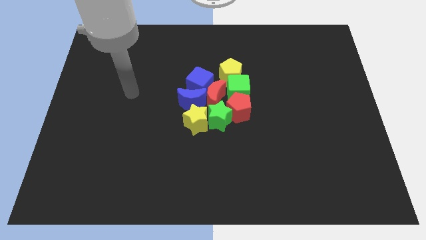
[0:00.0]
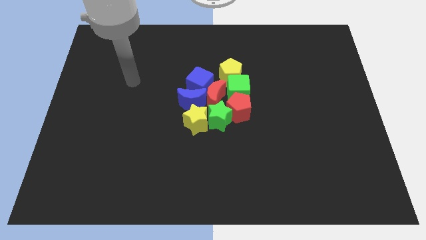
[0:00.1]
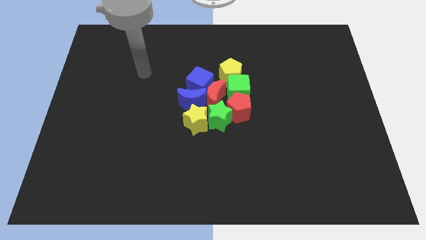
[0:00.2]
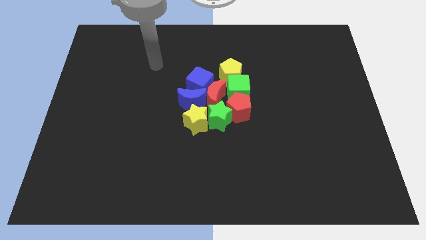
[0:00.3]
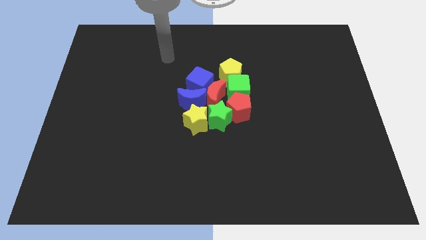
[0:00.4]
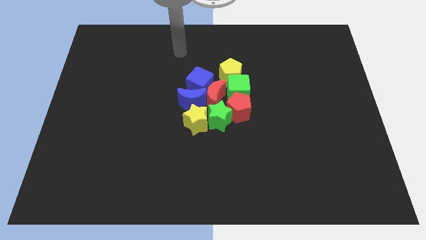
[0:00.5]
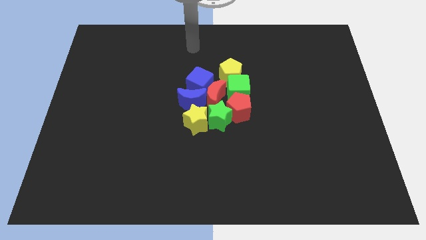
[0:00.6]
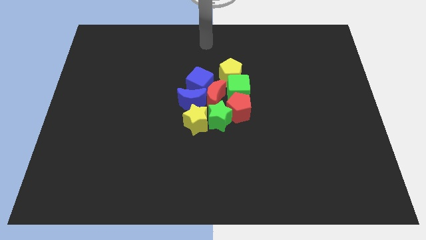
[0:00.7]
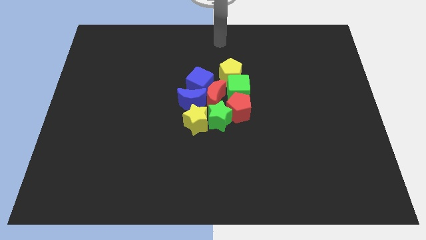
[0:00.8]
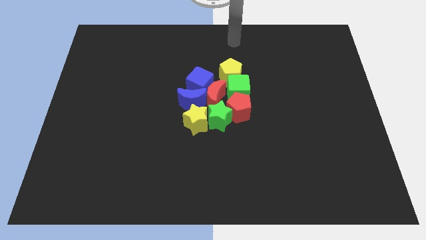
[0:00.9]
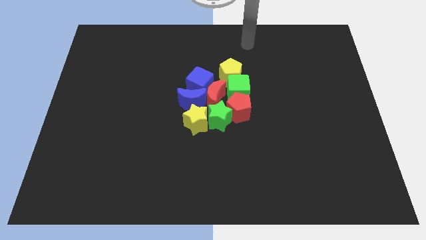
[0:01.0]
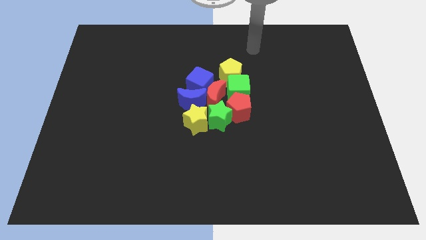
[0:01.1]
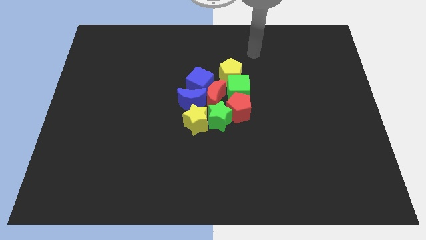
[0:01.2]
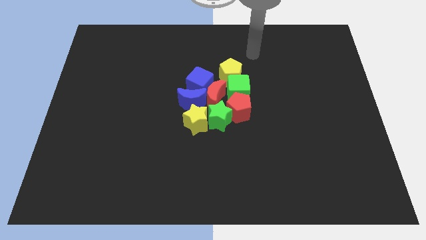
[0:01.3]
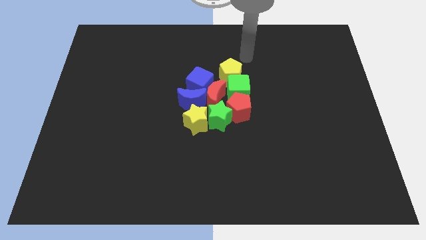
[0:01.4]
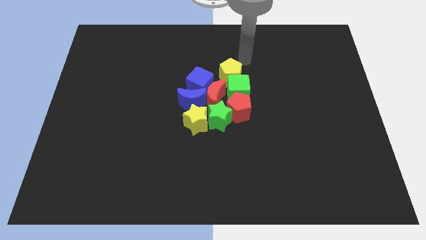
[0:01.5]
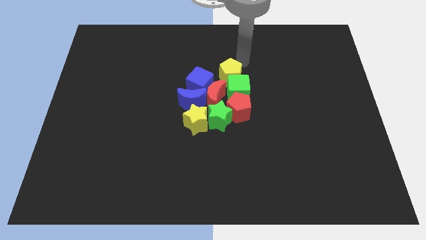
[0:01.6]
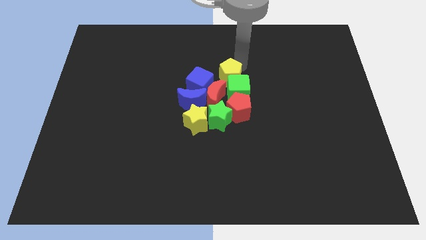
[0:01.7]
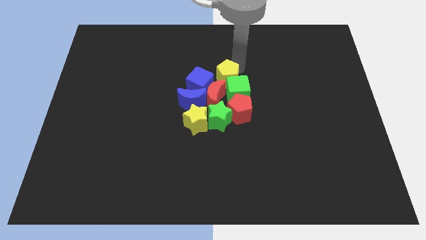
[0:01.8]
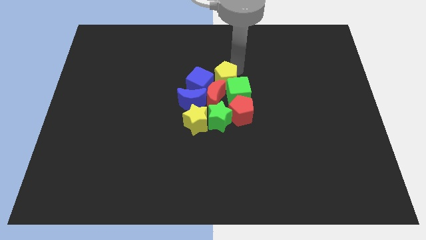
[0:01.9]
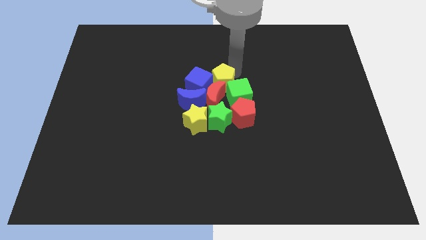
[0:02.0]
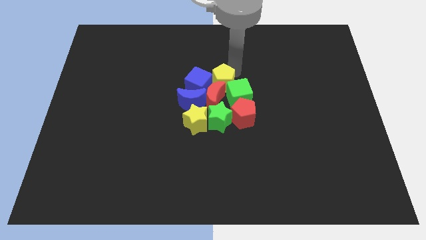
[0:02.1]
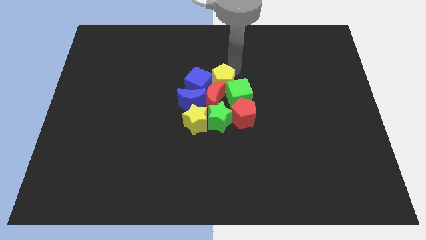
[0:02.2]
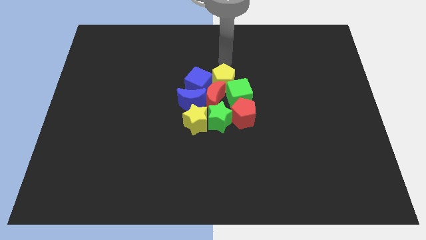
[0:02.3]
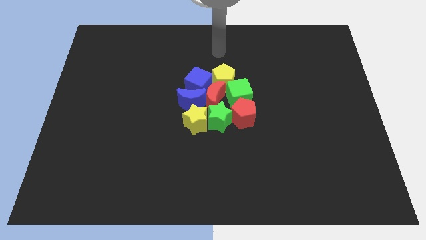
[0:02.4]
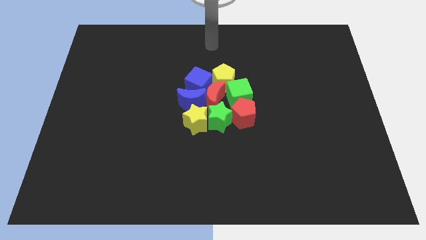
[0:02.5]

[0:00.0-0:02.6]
push the yellow pentagon into the red crescent

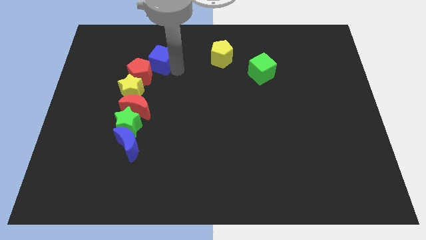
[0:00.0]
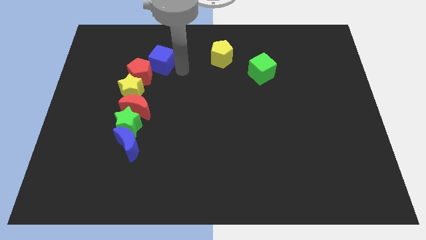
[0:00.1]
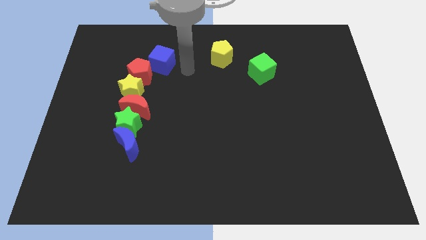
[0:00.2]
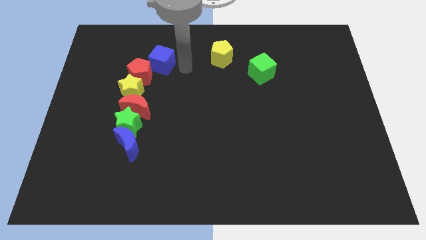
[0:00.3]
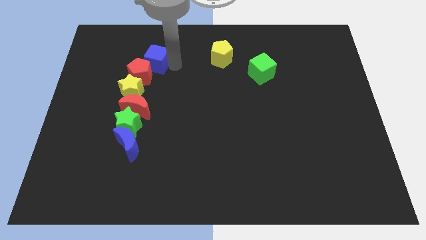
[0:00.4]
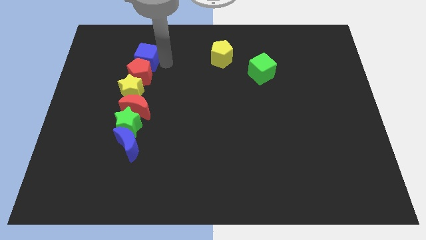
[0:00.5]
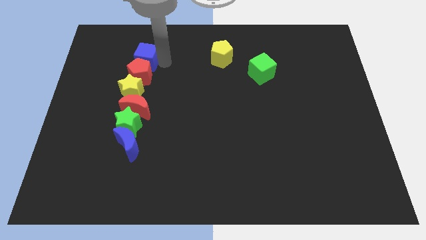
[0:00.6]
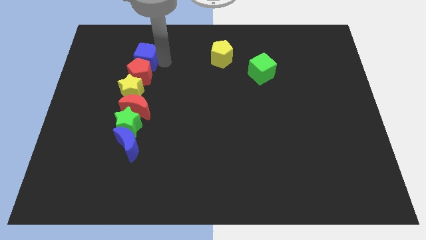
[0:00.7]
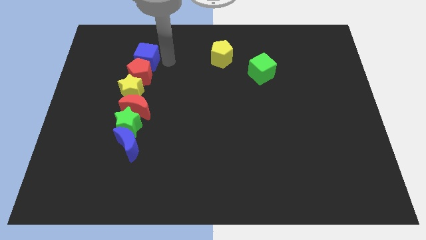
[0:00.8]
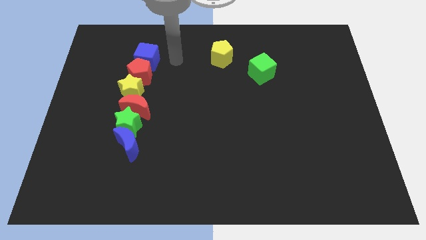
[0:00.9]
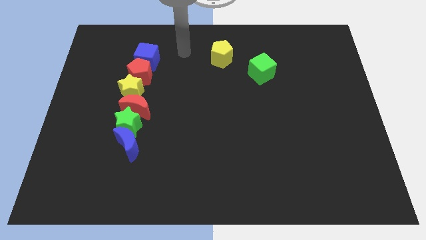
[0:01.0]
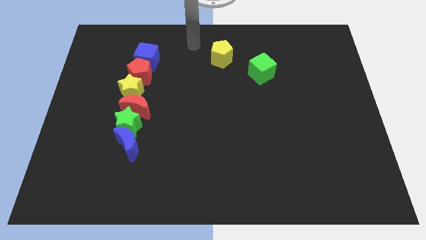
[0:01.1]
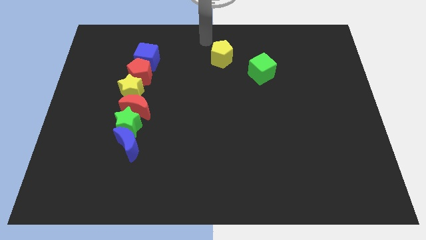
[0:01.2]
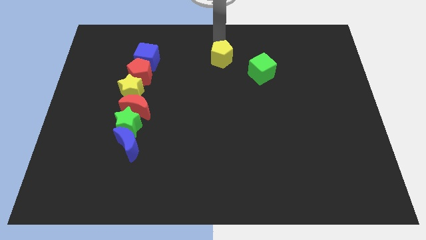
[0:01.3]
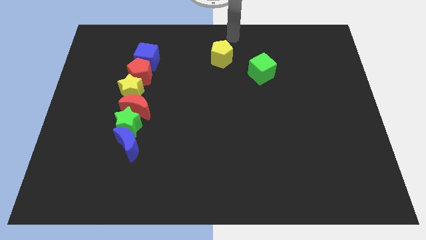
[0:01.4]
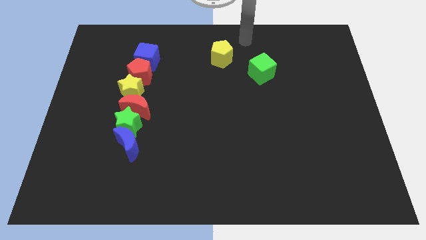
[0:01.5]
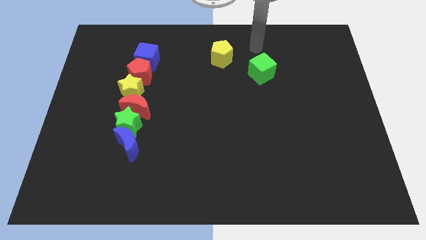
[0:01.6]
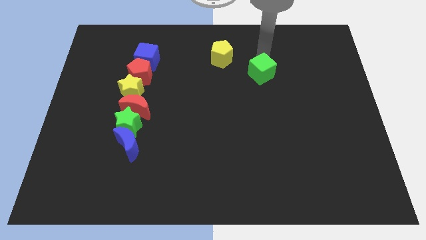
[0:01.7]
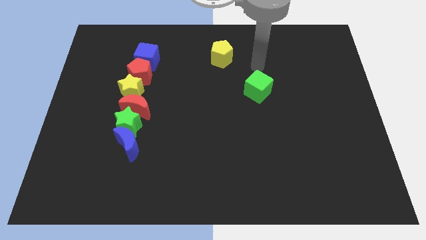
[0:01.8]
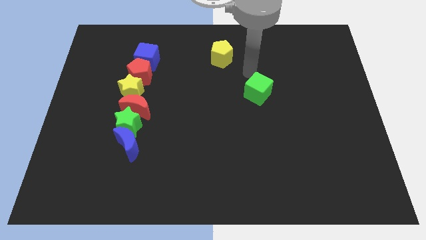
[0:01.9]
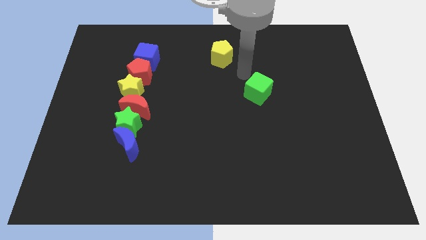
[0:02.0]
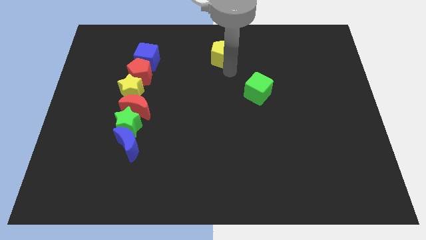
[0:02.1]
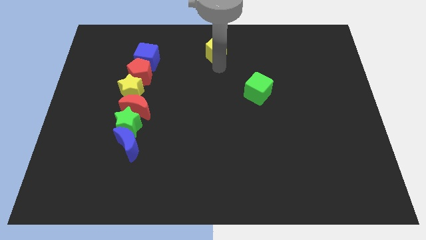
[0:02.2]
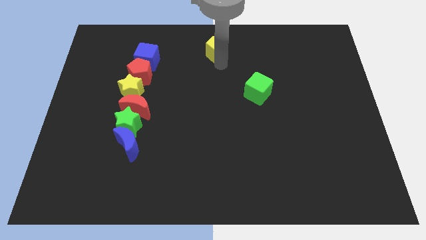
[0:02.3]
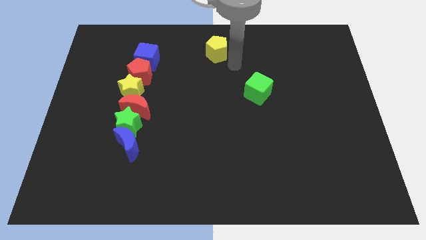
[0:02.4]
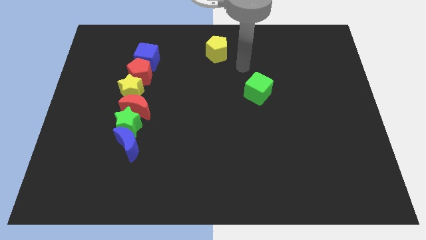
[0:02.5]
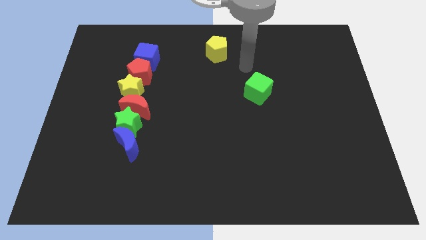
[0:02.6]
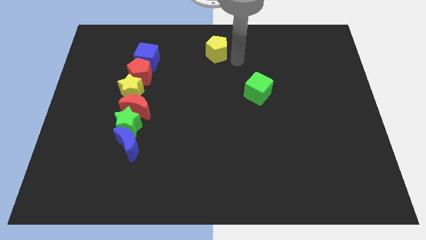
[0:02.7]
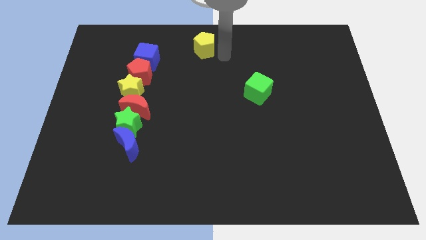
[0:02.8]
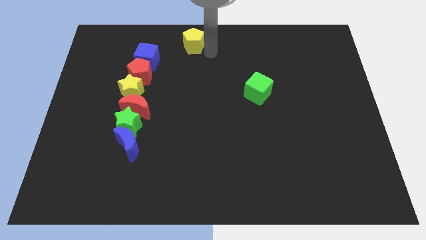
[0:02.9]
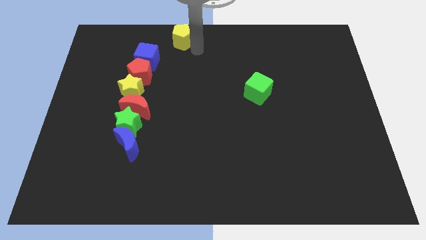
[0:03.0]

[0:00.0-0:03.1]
move the yellow pentagon towards the blue cube

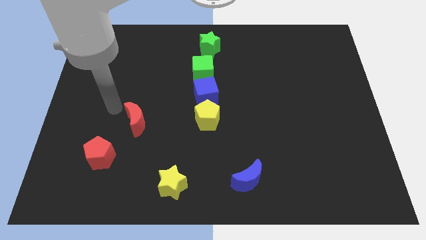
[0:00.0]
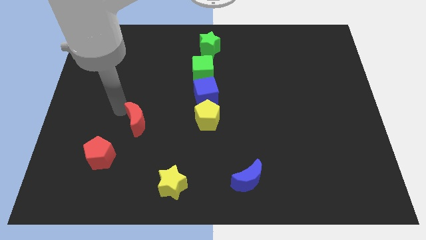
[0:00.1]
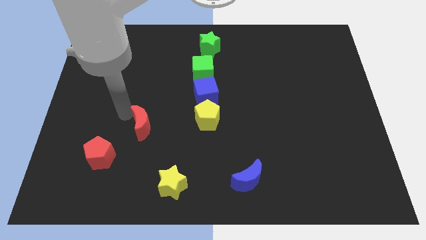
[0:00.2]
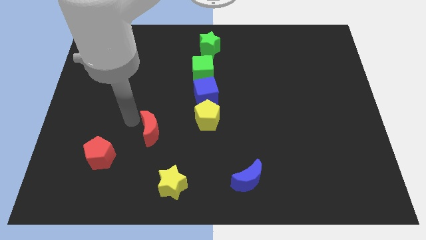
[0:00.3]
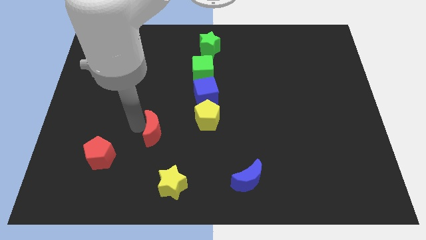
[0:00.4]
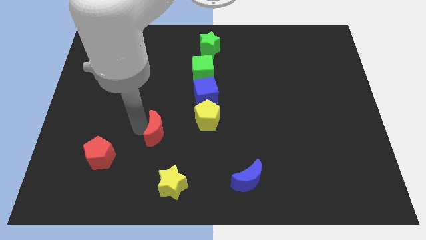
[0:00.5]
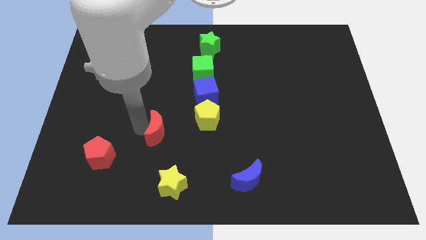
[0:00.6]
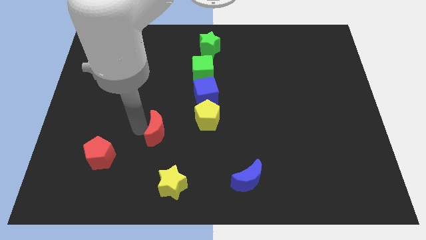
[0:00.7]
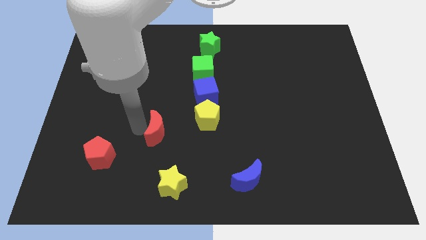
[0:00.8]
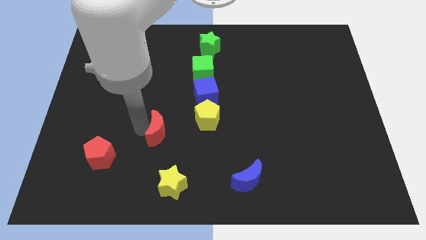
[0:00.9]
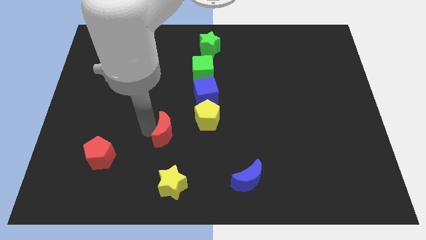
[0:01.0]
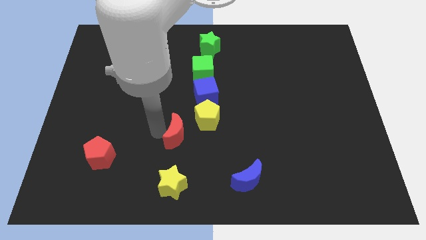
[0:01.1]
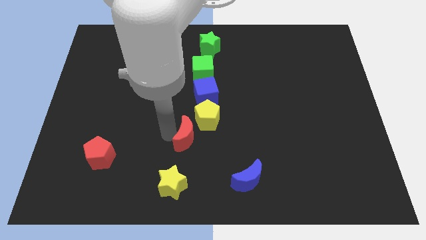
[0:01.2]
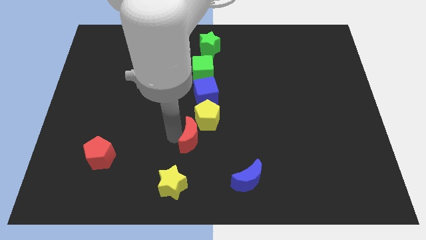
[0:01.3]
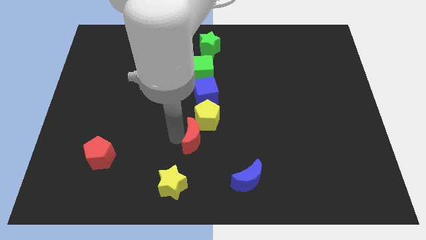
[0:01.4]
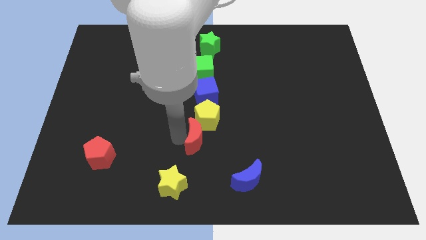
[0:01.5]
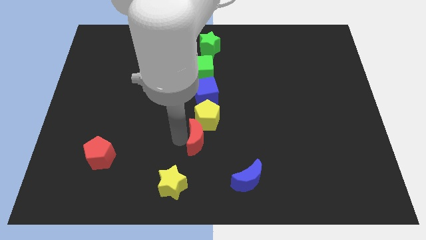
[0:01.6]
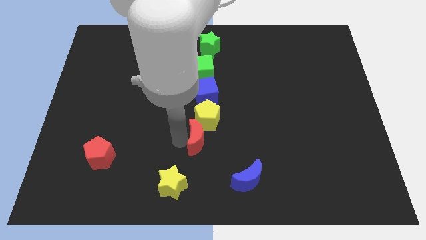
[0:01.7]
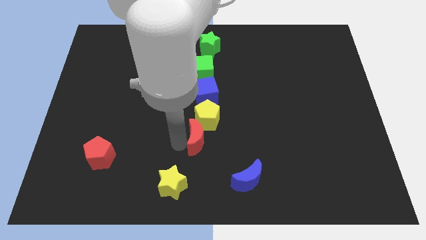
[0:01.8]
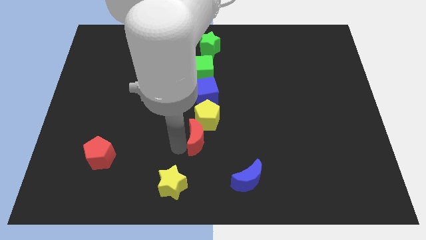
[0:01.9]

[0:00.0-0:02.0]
place the red moon below the yellow pentagon

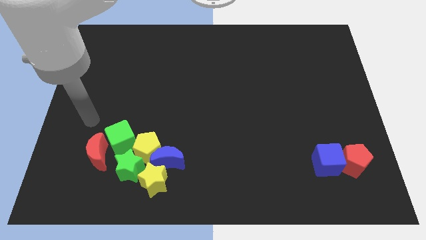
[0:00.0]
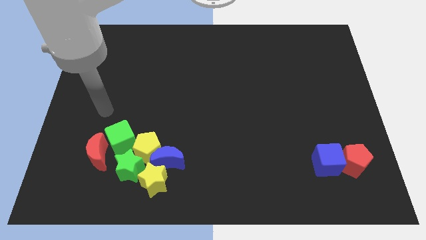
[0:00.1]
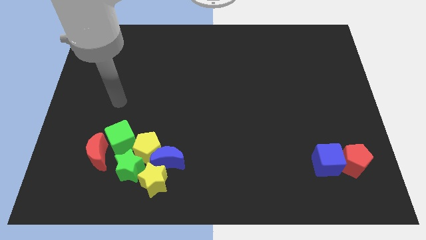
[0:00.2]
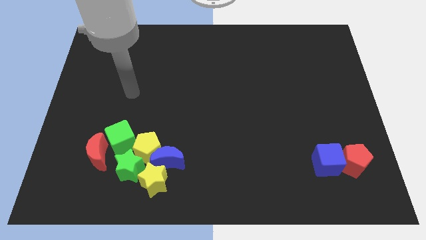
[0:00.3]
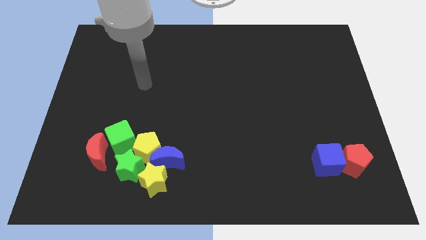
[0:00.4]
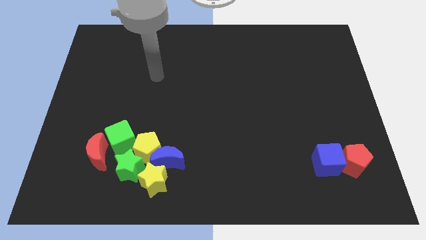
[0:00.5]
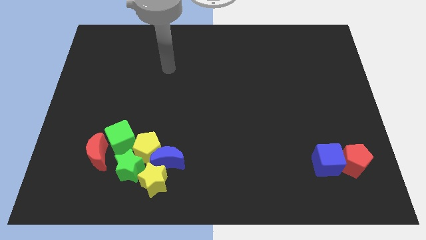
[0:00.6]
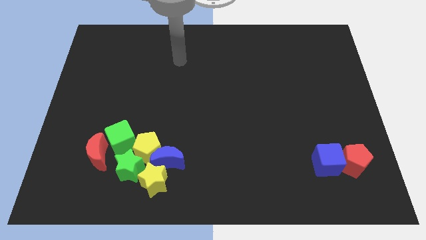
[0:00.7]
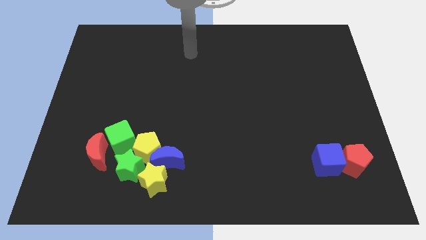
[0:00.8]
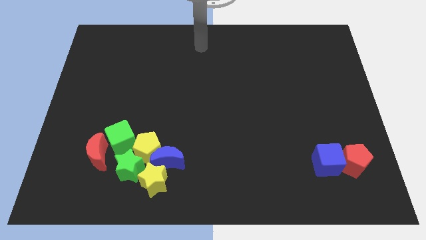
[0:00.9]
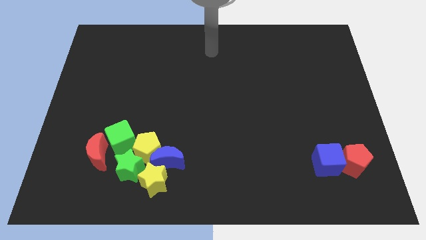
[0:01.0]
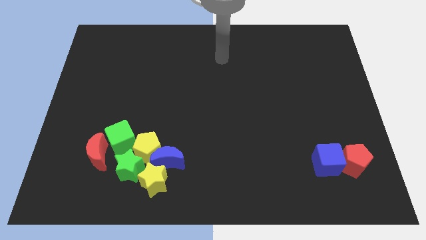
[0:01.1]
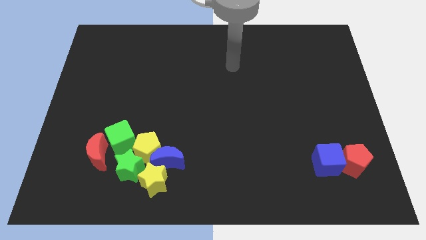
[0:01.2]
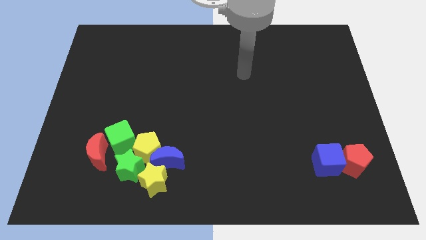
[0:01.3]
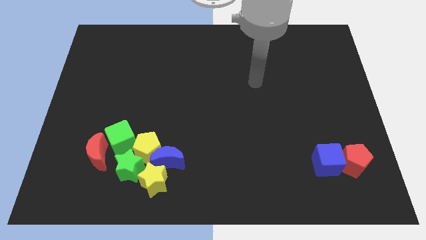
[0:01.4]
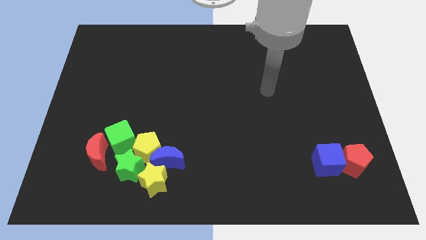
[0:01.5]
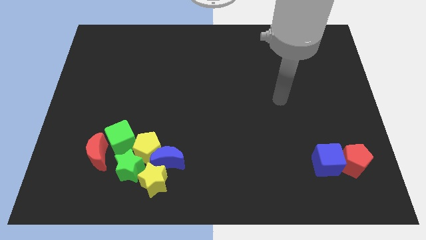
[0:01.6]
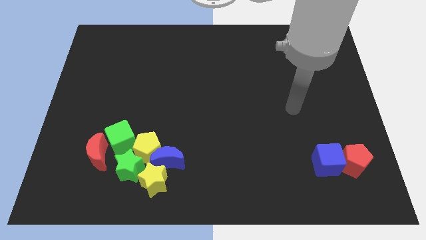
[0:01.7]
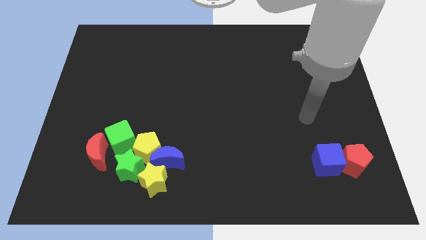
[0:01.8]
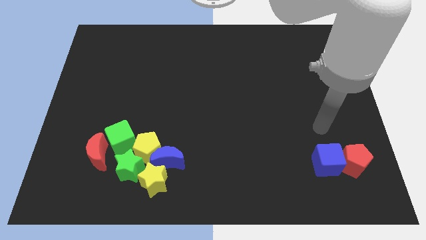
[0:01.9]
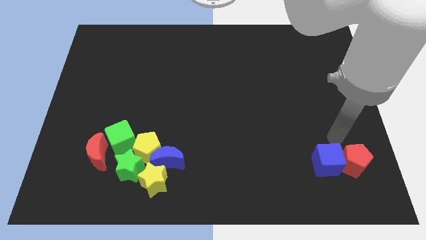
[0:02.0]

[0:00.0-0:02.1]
place your arm at the top of the blue cube
